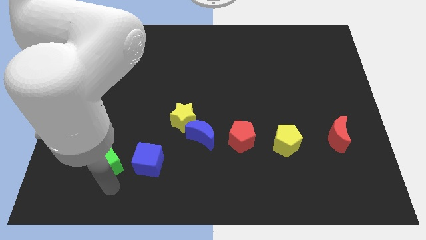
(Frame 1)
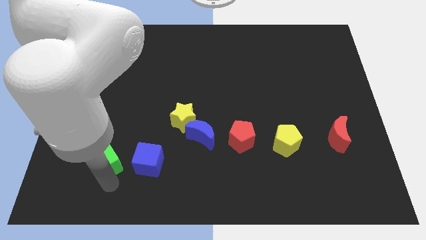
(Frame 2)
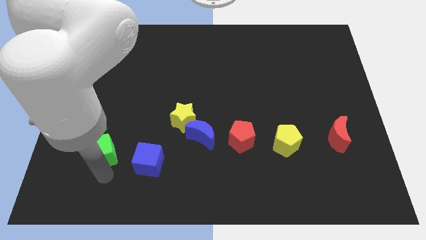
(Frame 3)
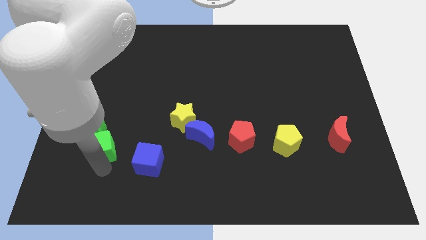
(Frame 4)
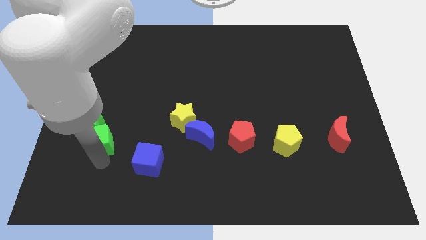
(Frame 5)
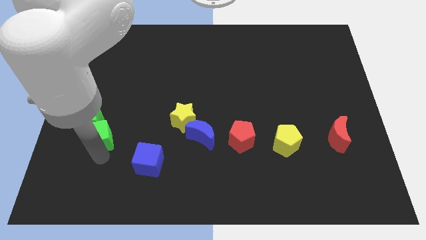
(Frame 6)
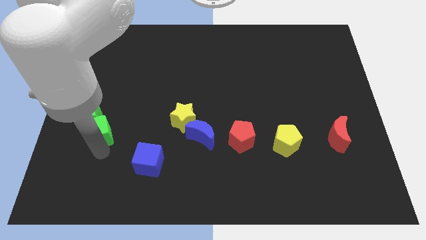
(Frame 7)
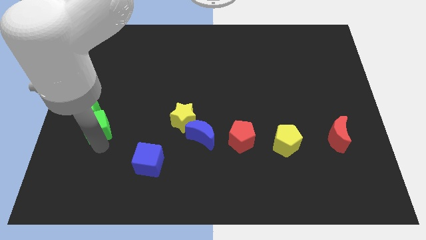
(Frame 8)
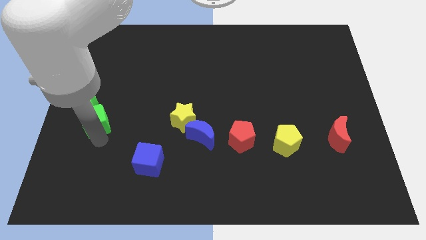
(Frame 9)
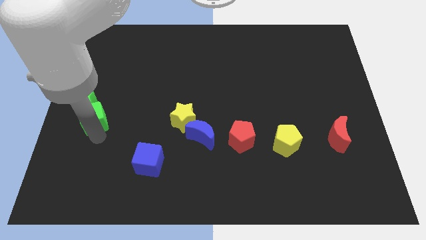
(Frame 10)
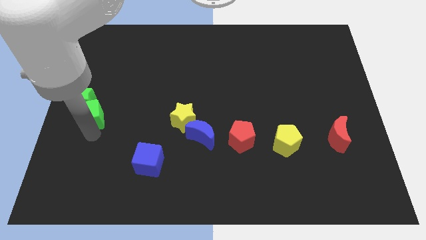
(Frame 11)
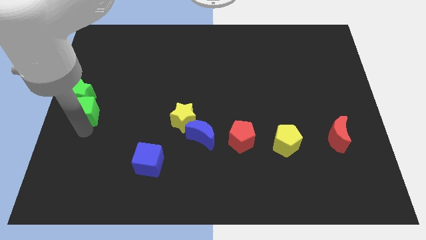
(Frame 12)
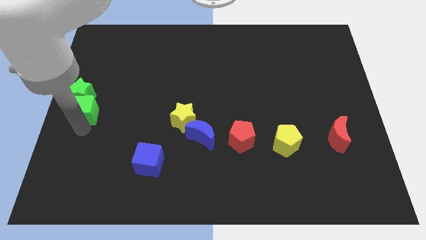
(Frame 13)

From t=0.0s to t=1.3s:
push the green cube in to green star

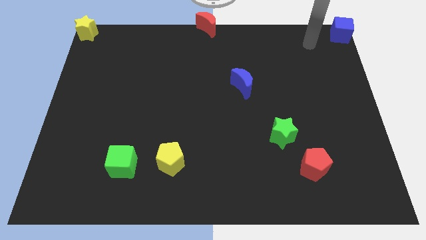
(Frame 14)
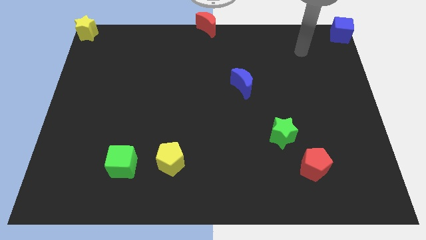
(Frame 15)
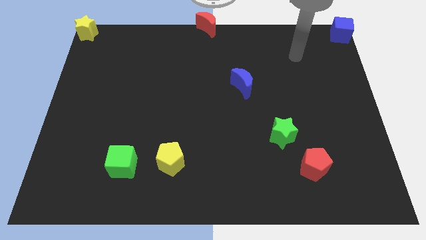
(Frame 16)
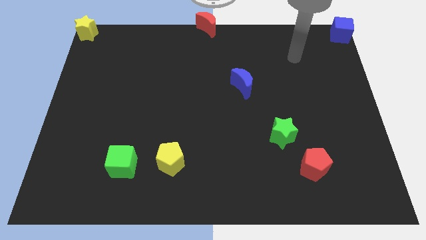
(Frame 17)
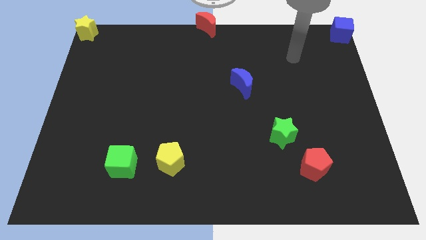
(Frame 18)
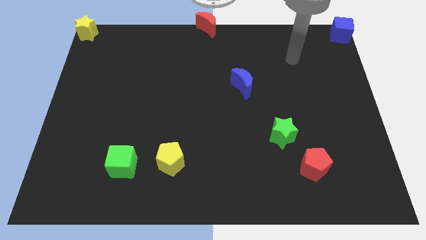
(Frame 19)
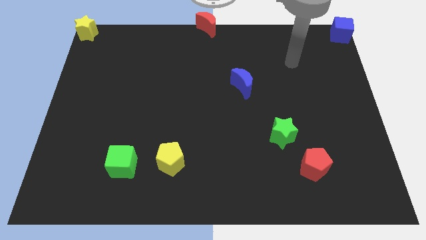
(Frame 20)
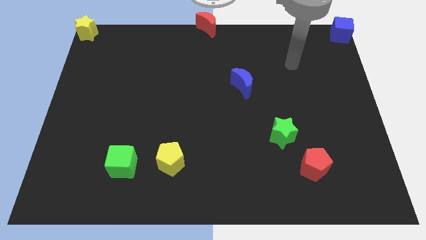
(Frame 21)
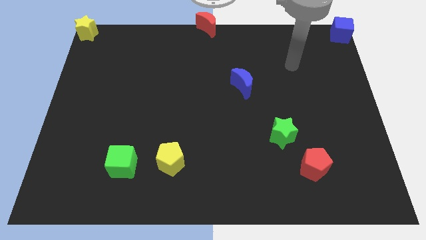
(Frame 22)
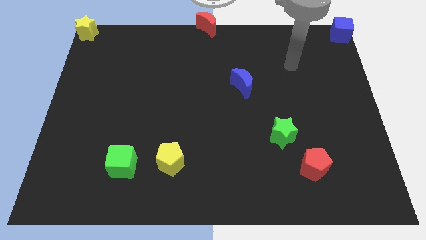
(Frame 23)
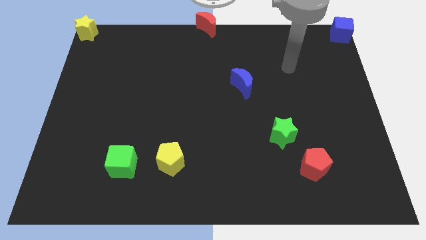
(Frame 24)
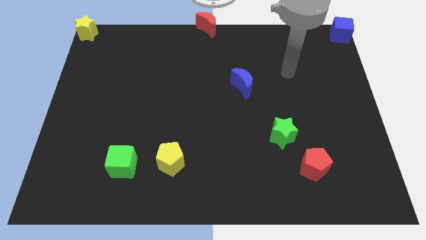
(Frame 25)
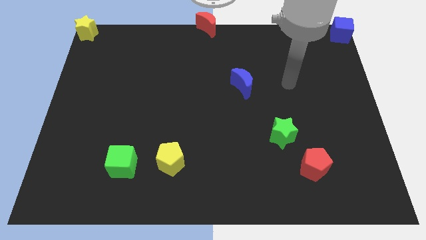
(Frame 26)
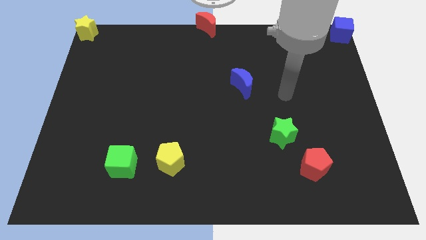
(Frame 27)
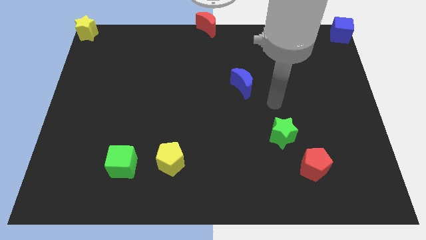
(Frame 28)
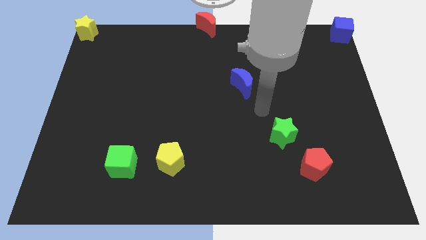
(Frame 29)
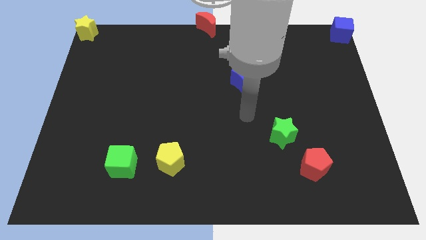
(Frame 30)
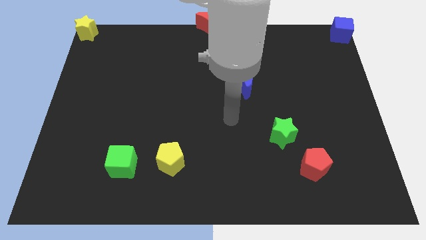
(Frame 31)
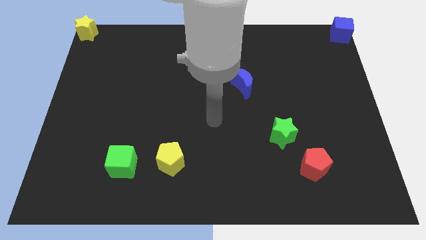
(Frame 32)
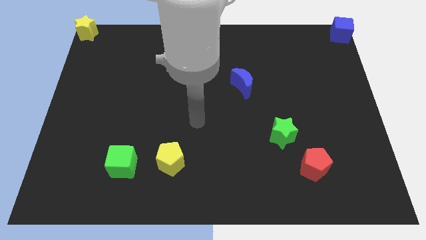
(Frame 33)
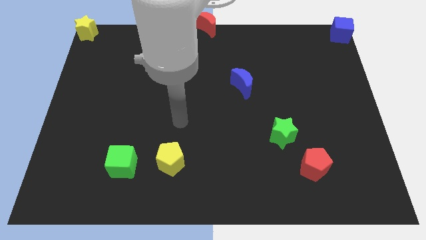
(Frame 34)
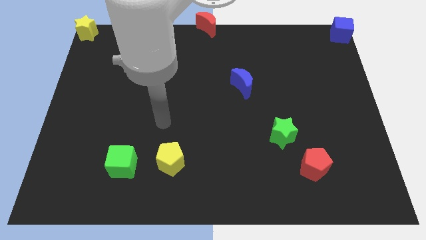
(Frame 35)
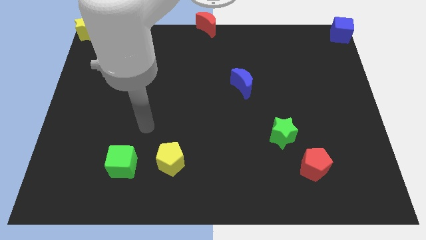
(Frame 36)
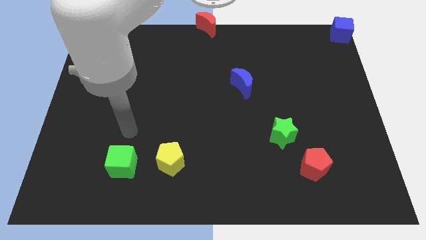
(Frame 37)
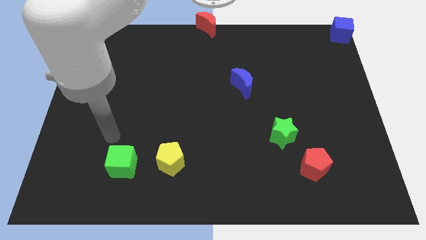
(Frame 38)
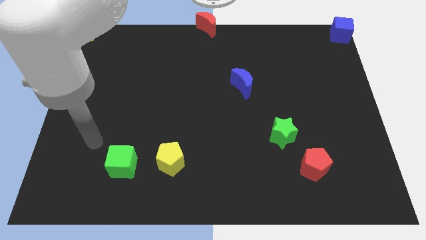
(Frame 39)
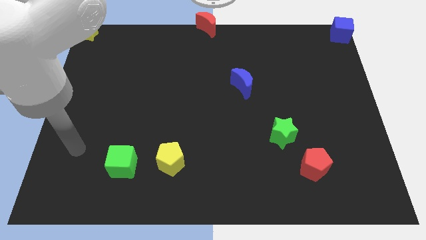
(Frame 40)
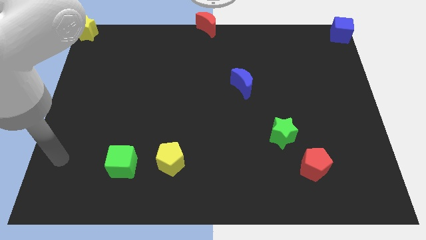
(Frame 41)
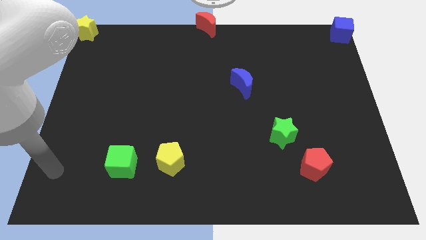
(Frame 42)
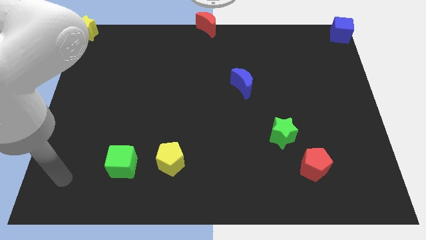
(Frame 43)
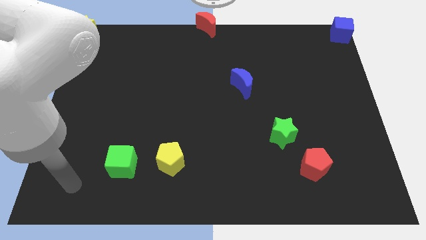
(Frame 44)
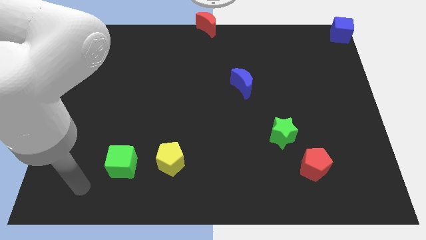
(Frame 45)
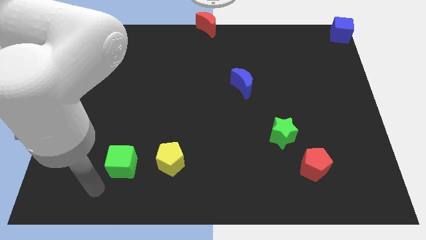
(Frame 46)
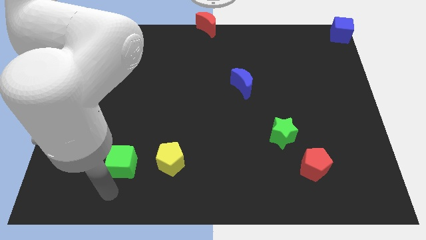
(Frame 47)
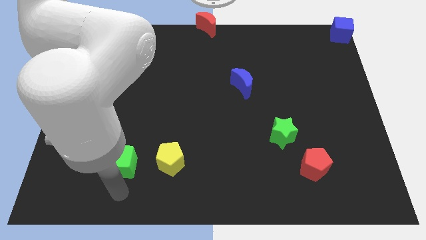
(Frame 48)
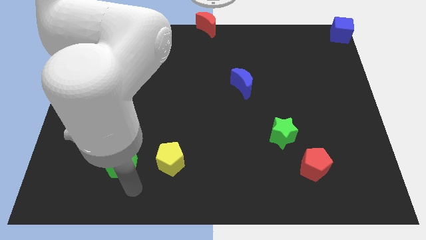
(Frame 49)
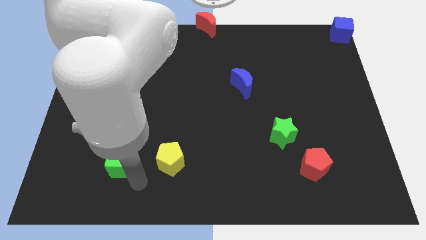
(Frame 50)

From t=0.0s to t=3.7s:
move your arm from blue cube to the green cube

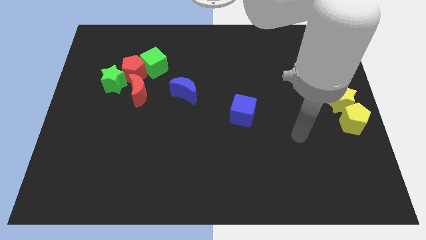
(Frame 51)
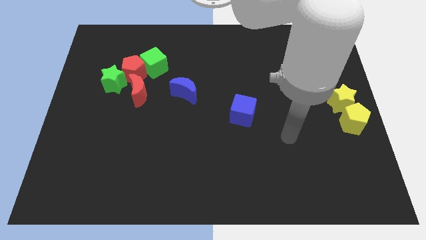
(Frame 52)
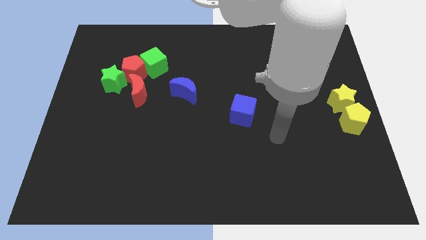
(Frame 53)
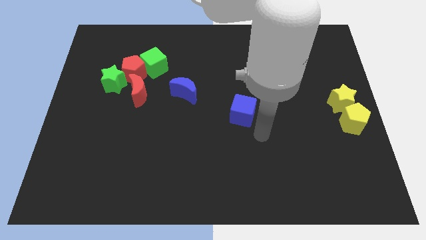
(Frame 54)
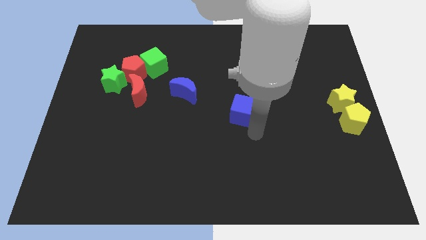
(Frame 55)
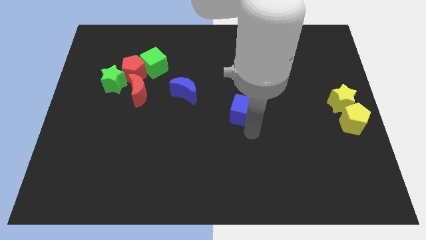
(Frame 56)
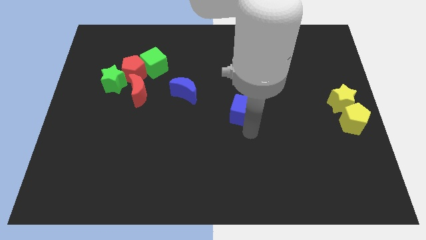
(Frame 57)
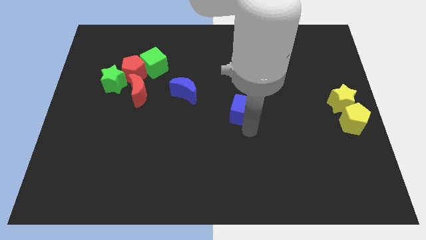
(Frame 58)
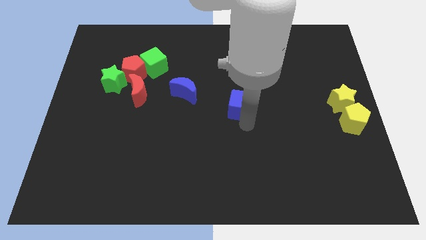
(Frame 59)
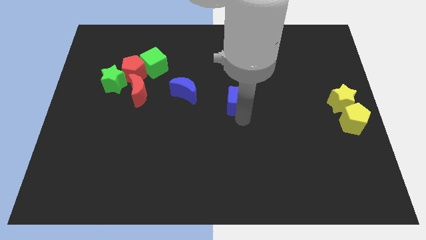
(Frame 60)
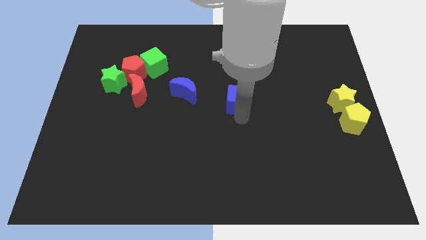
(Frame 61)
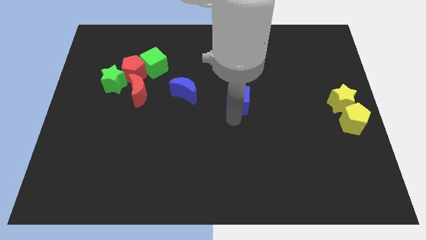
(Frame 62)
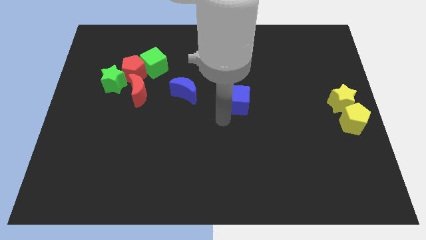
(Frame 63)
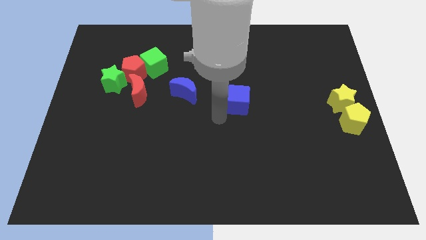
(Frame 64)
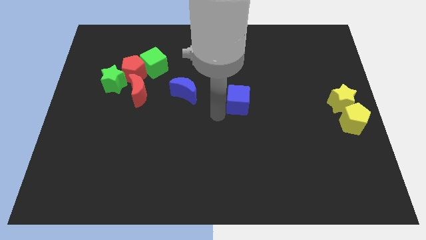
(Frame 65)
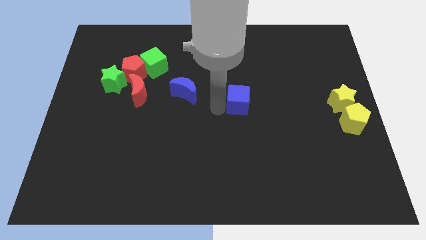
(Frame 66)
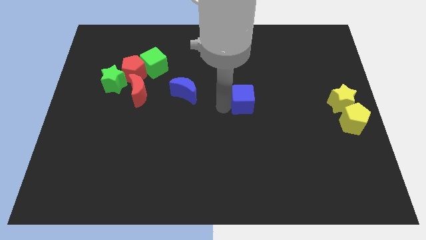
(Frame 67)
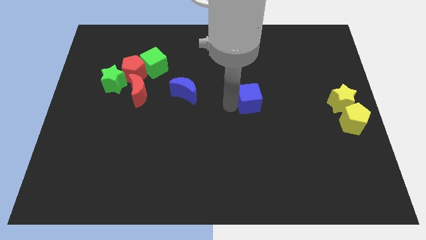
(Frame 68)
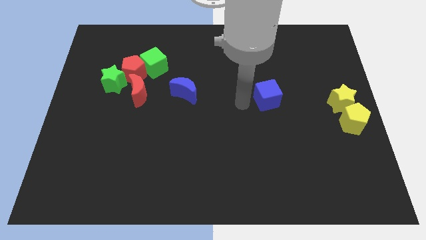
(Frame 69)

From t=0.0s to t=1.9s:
place the blue cube in between the yellow star and blue moon

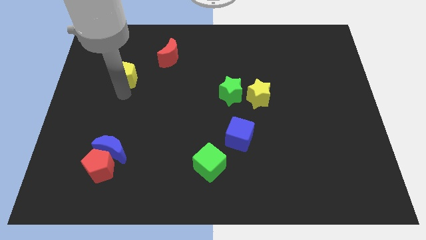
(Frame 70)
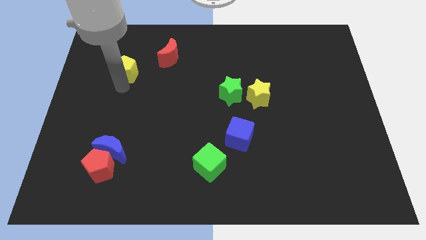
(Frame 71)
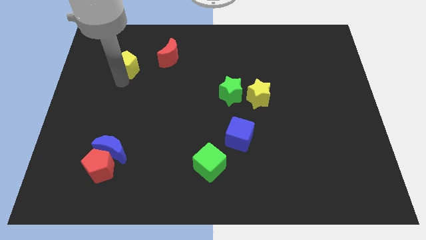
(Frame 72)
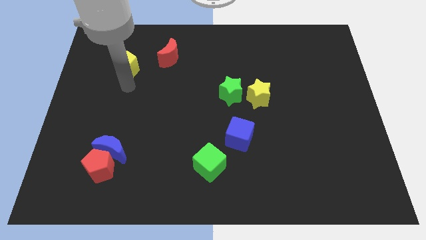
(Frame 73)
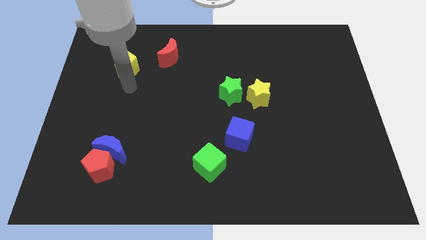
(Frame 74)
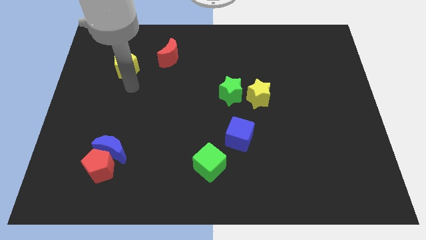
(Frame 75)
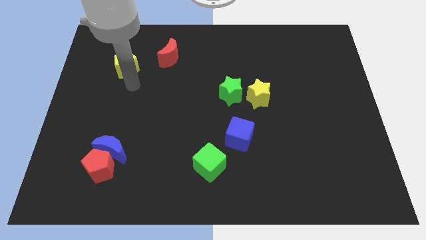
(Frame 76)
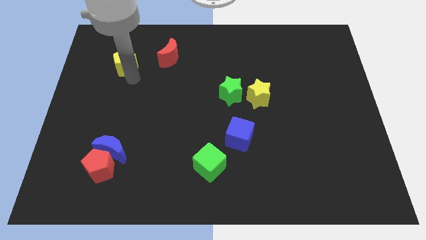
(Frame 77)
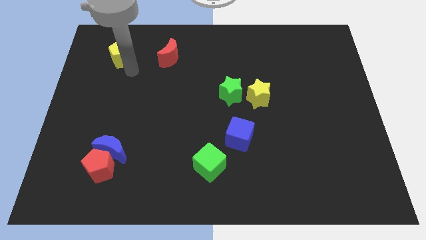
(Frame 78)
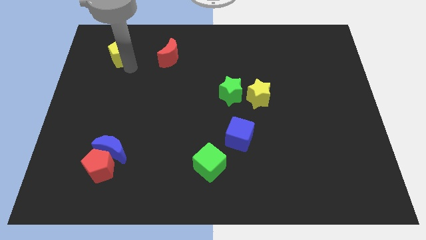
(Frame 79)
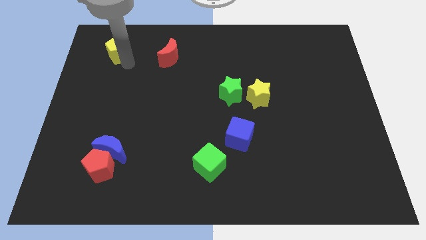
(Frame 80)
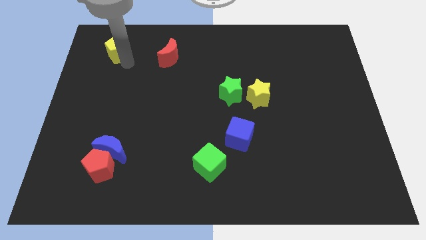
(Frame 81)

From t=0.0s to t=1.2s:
slide the yellow pentagon parallel left to the red moon

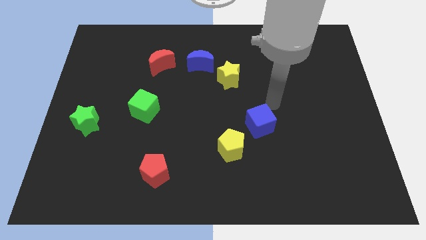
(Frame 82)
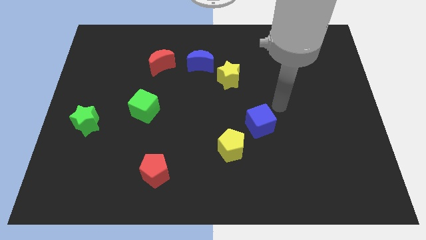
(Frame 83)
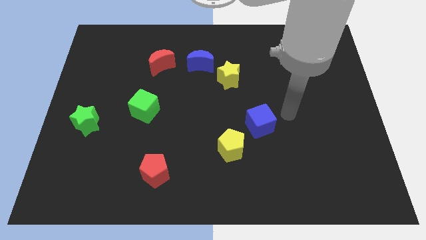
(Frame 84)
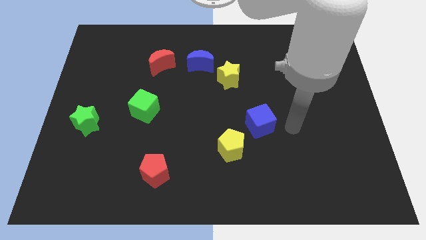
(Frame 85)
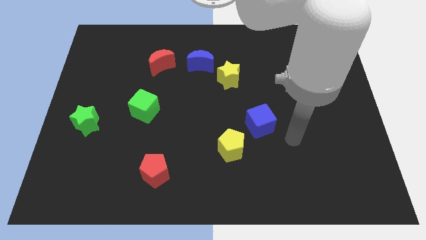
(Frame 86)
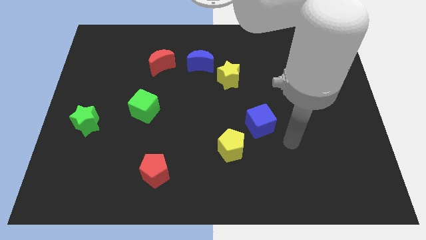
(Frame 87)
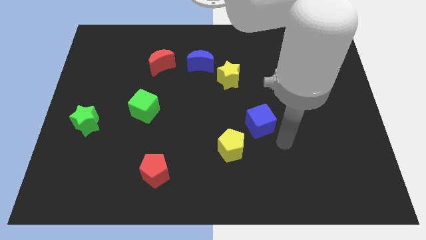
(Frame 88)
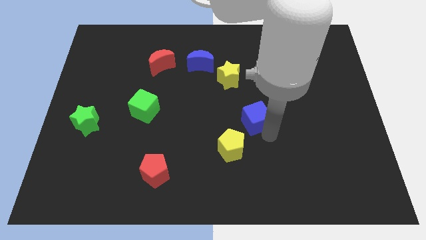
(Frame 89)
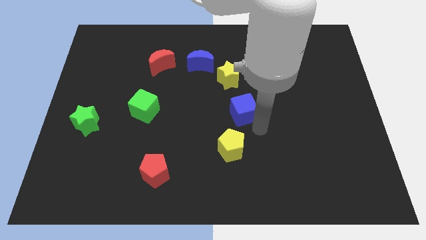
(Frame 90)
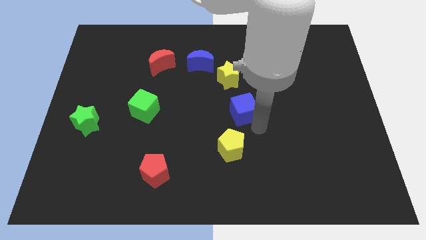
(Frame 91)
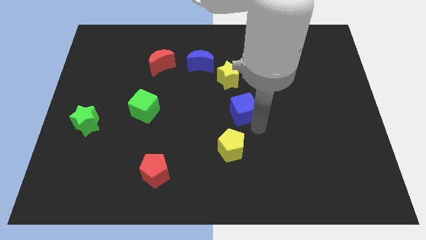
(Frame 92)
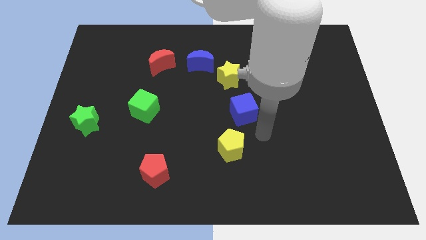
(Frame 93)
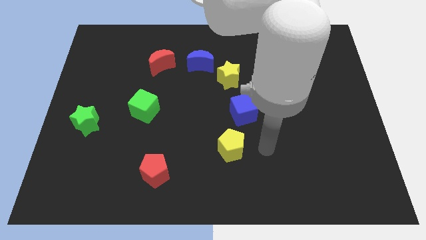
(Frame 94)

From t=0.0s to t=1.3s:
move the blue cube above the yellow pentagon
